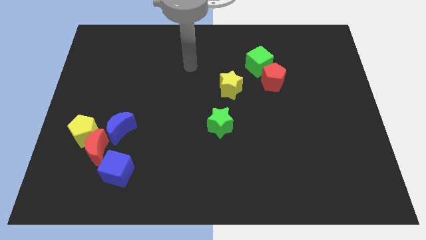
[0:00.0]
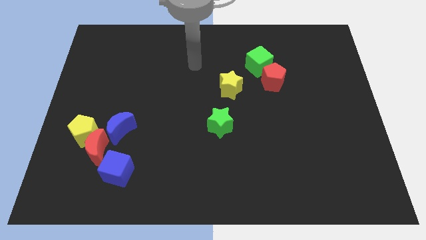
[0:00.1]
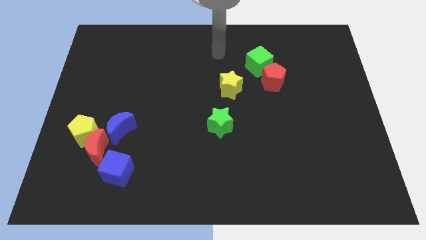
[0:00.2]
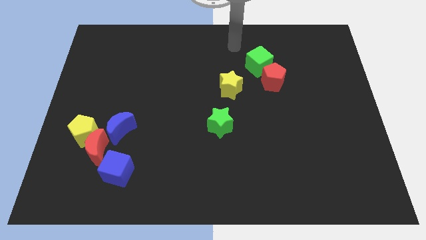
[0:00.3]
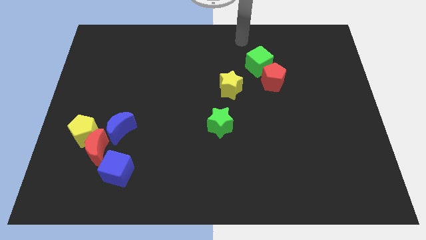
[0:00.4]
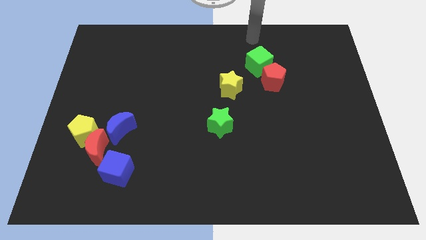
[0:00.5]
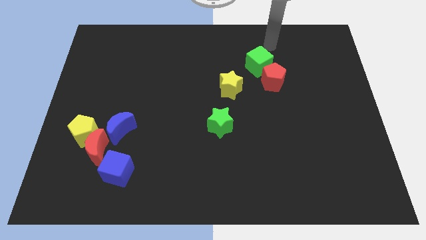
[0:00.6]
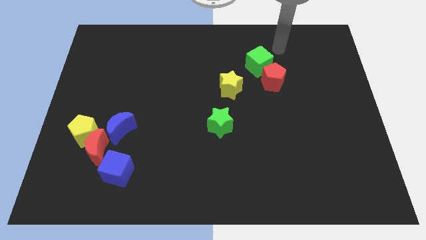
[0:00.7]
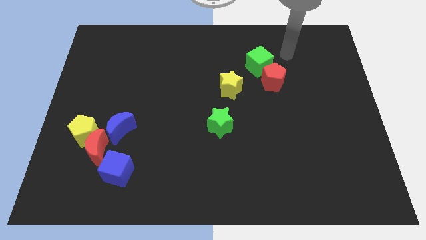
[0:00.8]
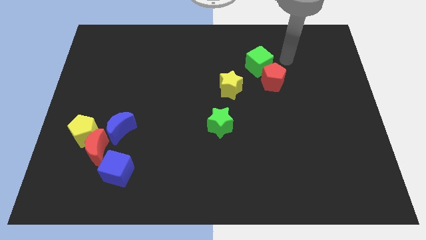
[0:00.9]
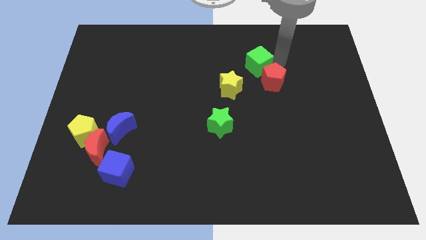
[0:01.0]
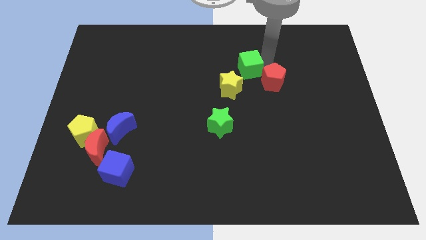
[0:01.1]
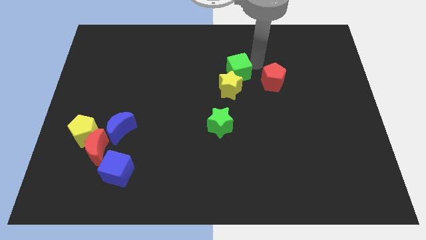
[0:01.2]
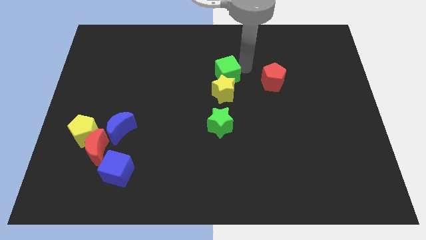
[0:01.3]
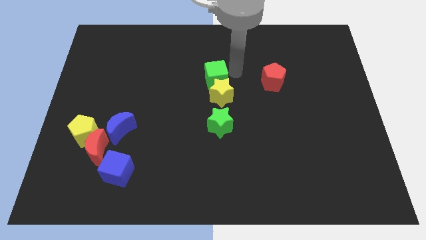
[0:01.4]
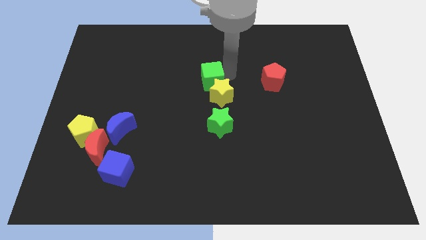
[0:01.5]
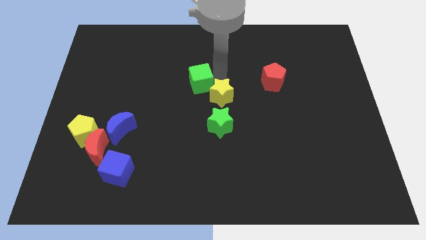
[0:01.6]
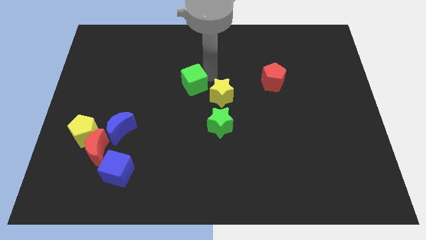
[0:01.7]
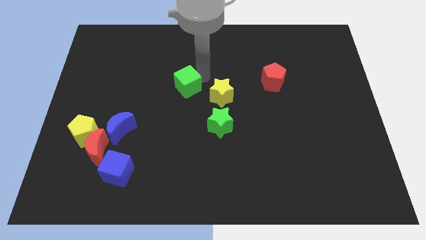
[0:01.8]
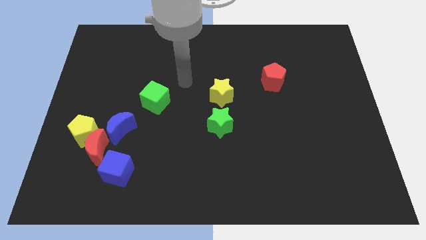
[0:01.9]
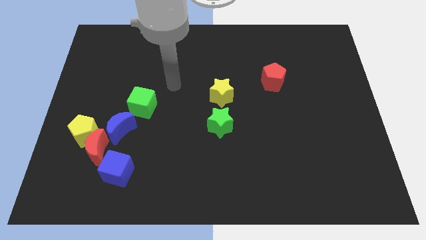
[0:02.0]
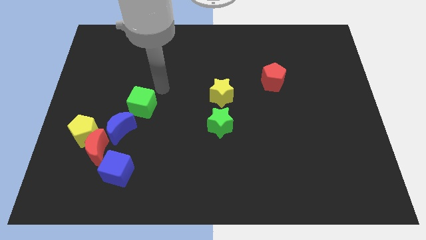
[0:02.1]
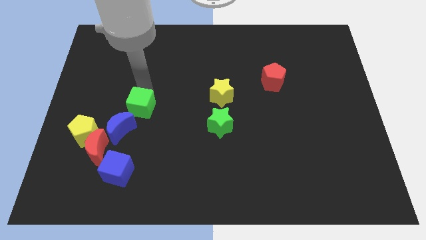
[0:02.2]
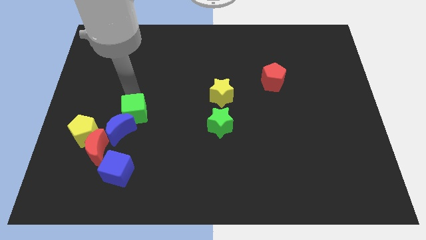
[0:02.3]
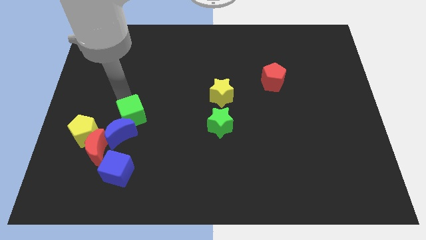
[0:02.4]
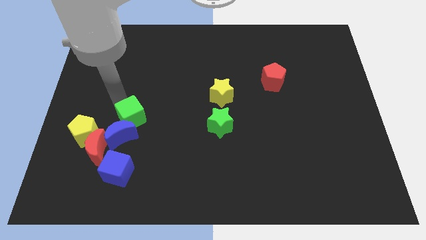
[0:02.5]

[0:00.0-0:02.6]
push the green cube next to the blue moon

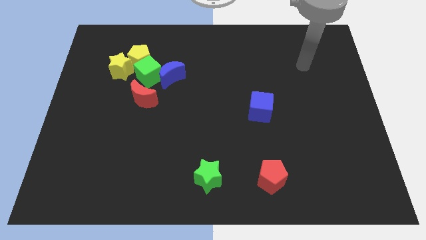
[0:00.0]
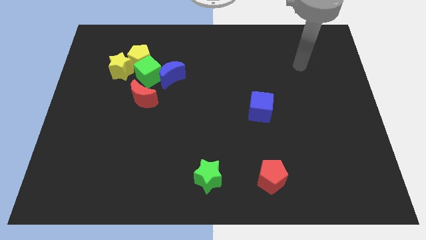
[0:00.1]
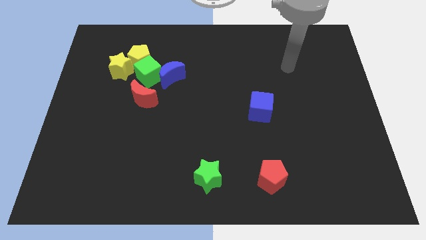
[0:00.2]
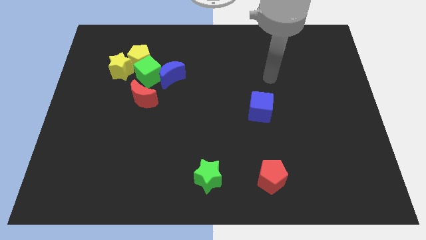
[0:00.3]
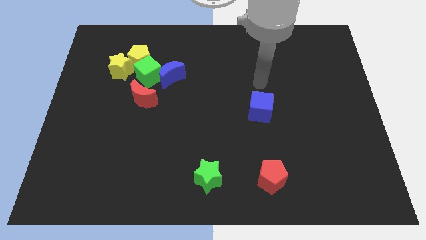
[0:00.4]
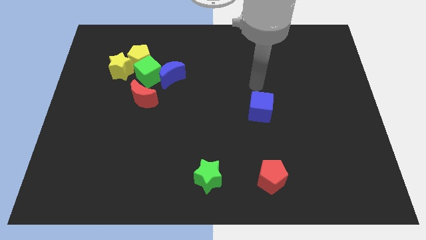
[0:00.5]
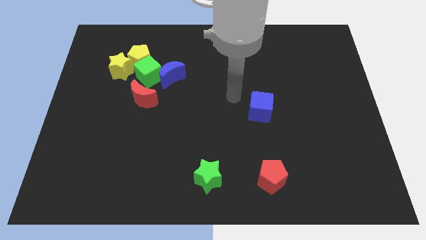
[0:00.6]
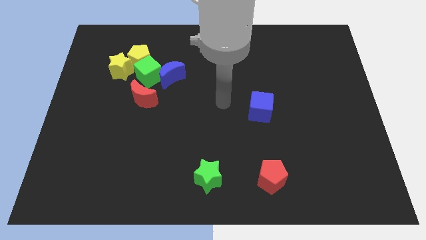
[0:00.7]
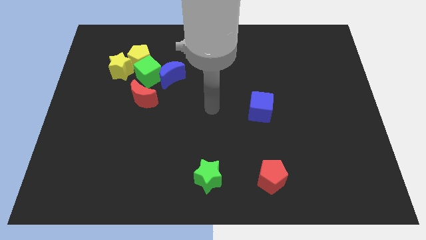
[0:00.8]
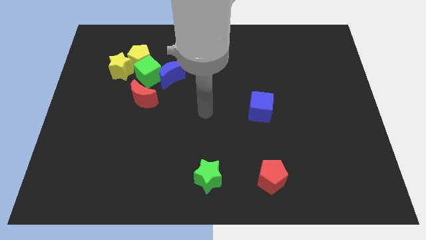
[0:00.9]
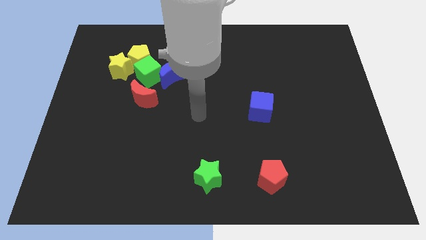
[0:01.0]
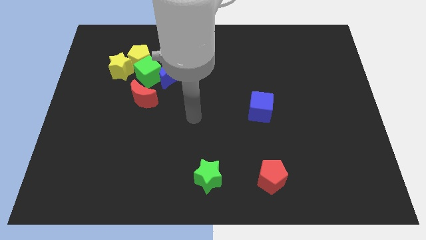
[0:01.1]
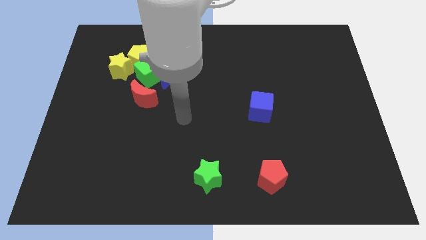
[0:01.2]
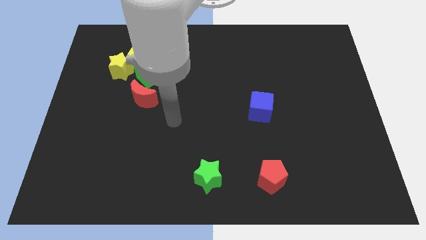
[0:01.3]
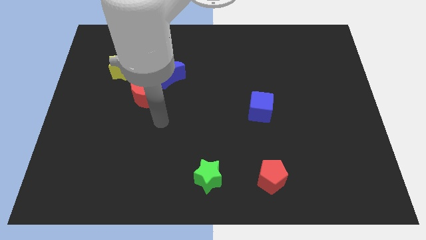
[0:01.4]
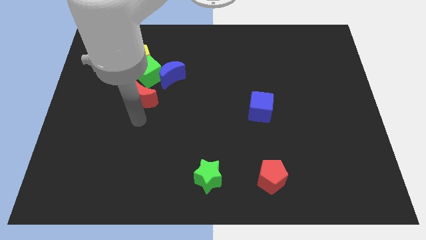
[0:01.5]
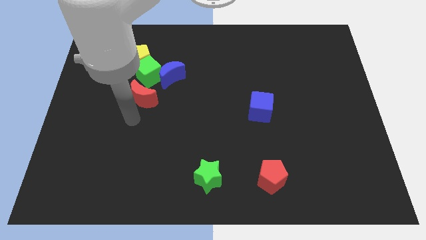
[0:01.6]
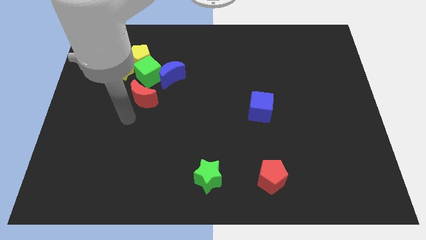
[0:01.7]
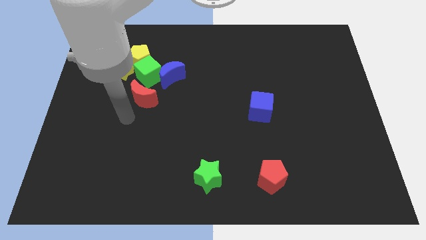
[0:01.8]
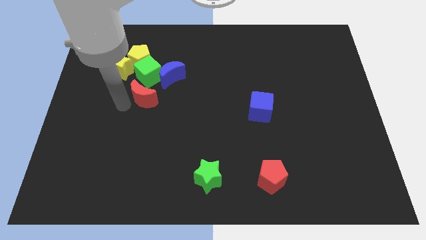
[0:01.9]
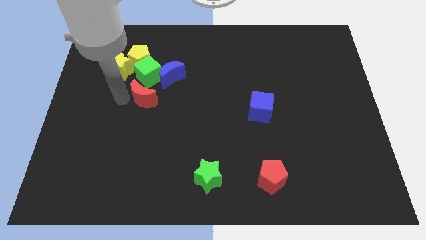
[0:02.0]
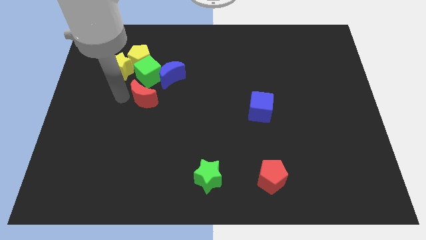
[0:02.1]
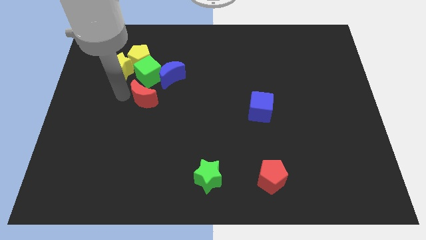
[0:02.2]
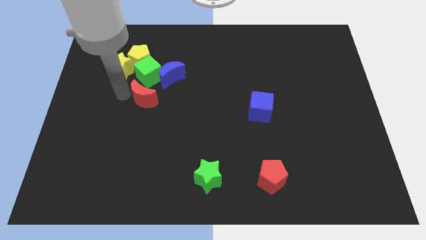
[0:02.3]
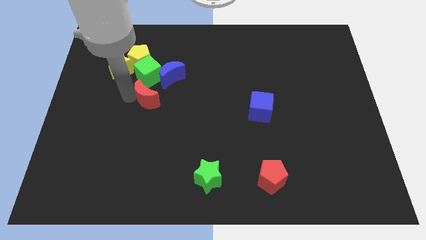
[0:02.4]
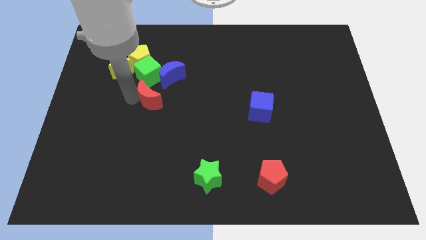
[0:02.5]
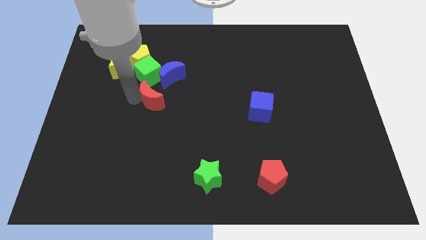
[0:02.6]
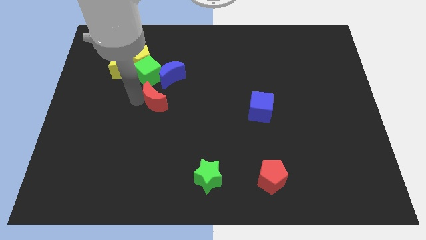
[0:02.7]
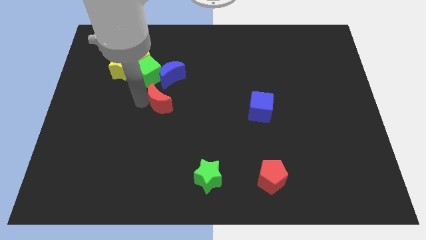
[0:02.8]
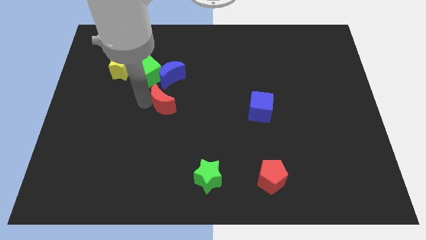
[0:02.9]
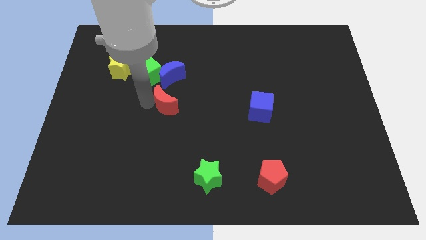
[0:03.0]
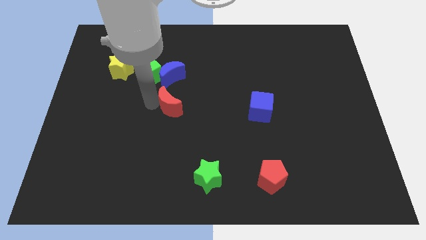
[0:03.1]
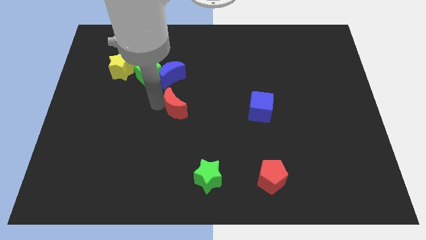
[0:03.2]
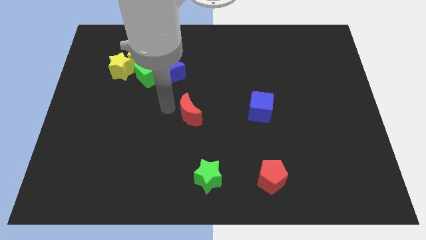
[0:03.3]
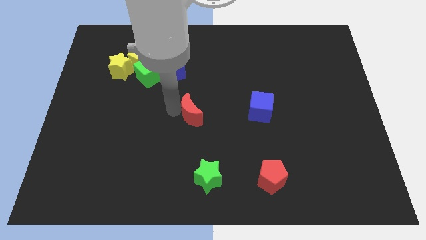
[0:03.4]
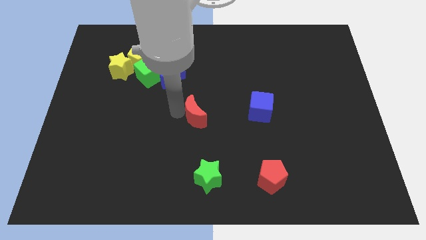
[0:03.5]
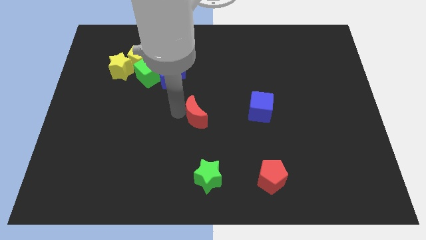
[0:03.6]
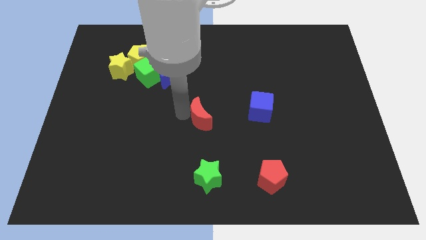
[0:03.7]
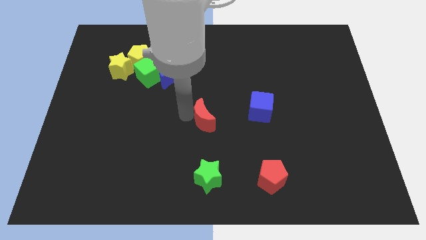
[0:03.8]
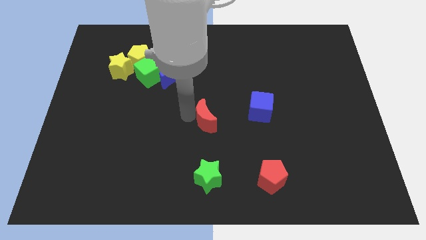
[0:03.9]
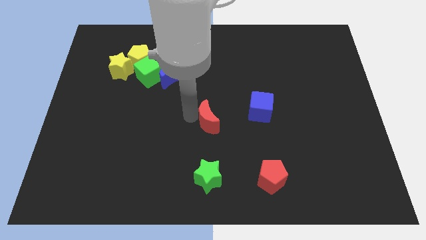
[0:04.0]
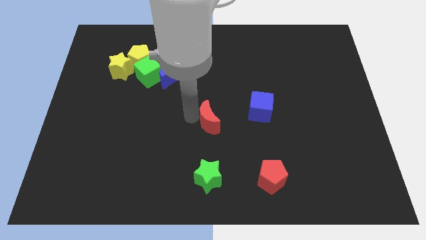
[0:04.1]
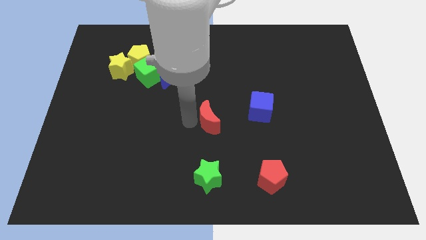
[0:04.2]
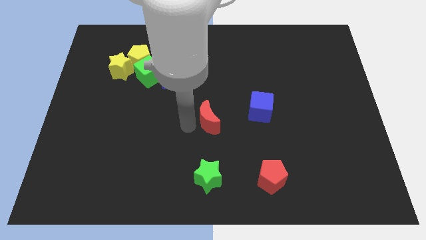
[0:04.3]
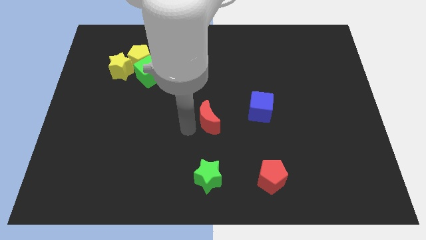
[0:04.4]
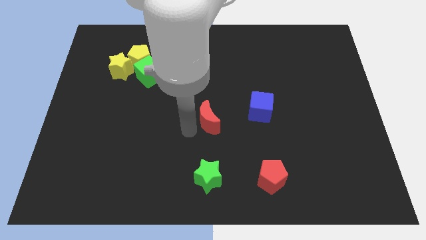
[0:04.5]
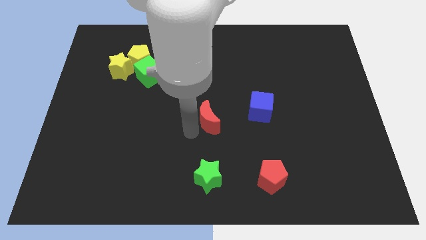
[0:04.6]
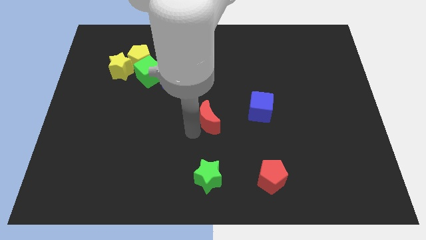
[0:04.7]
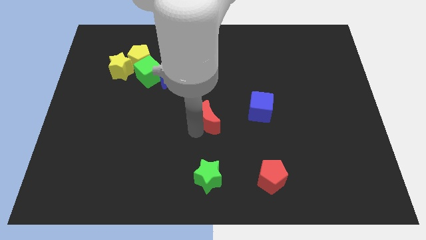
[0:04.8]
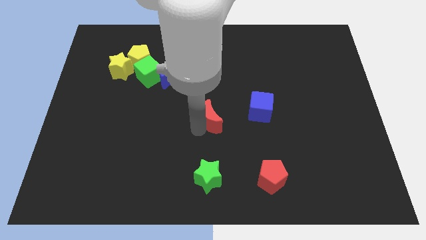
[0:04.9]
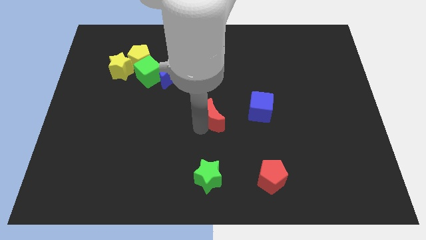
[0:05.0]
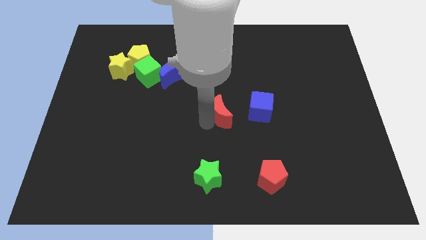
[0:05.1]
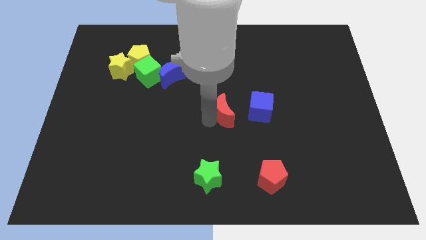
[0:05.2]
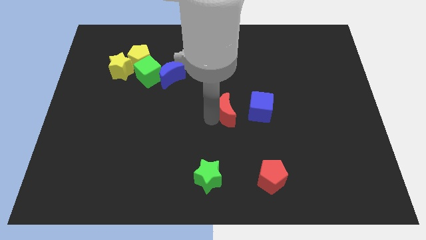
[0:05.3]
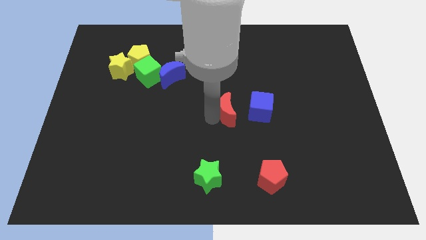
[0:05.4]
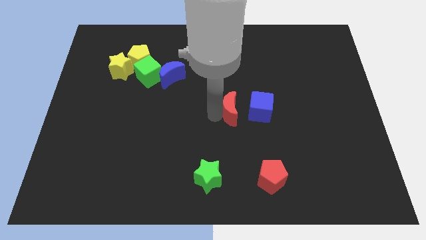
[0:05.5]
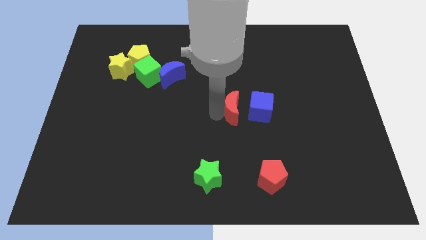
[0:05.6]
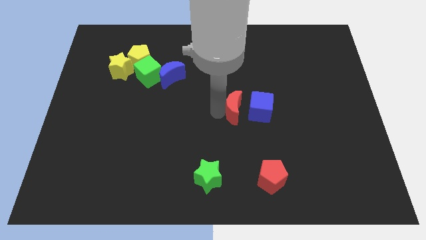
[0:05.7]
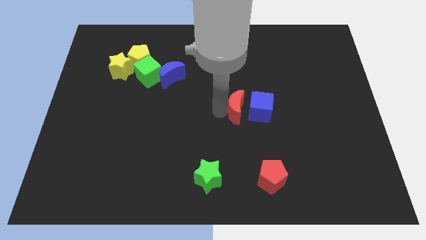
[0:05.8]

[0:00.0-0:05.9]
slide the red moon close to the blue cube
